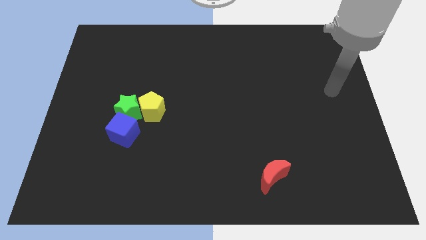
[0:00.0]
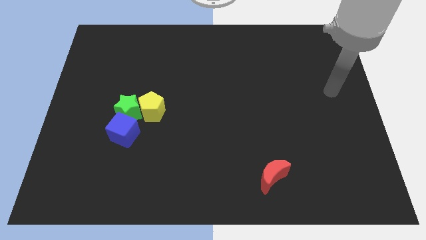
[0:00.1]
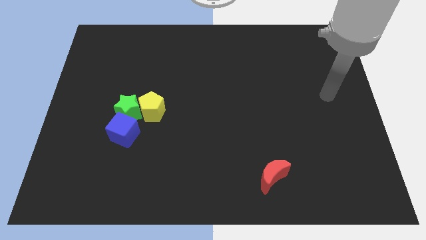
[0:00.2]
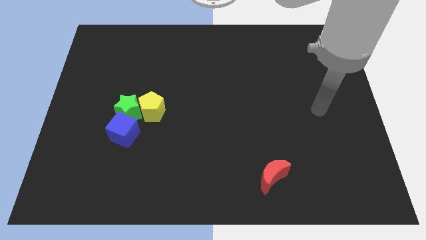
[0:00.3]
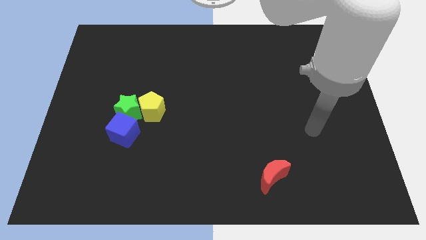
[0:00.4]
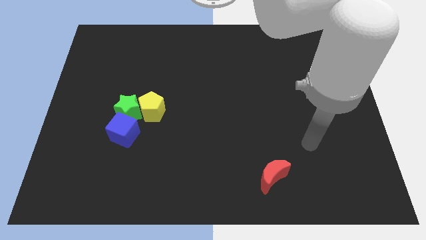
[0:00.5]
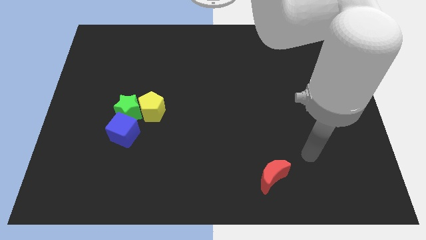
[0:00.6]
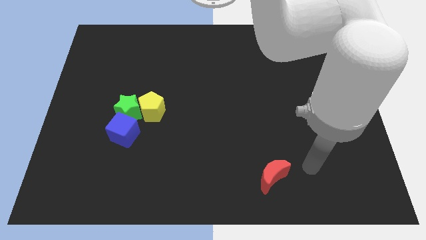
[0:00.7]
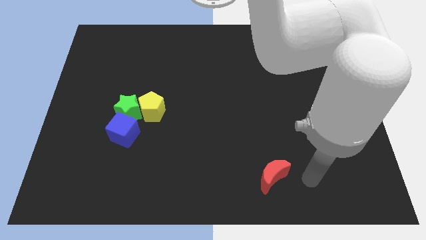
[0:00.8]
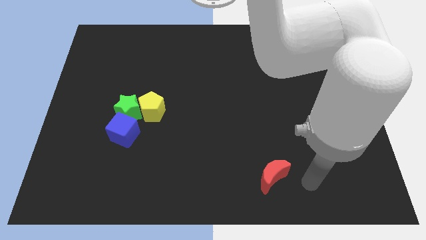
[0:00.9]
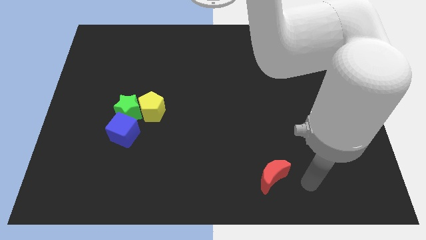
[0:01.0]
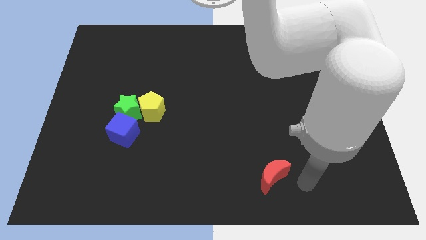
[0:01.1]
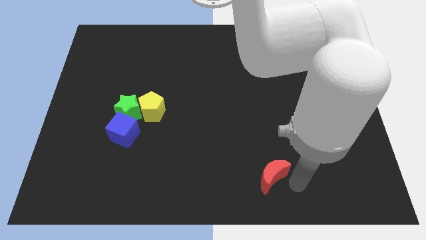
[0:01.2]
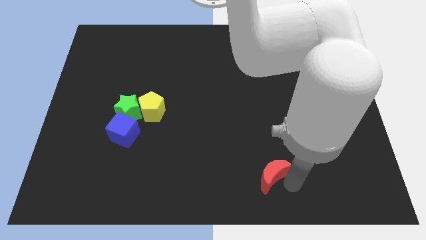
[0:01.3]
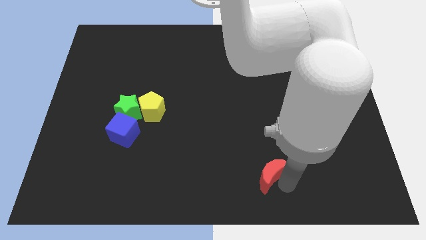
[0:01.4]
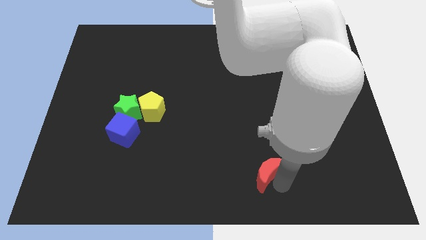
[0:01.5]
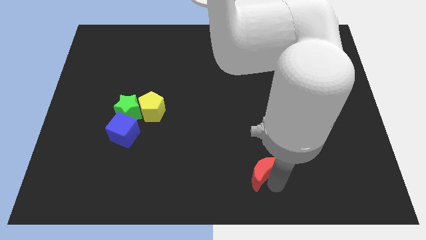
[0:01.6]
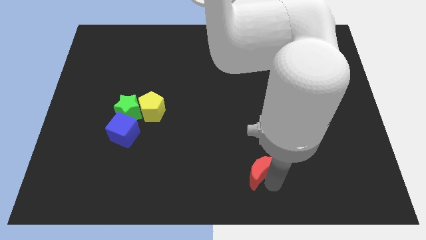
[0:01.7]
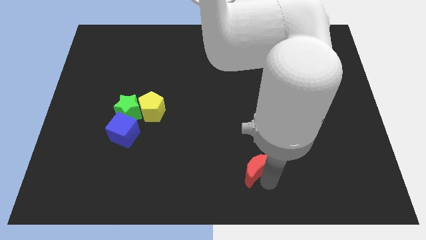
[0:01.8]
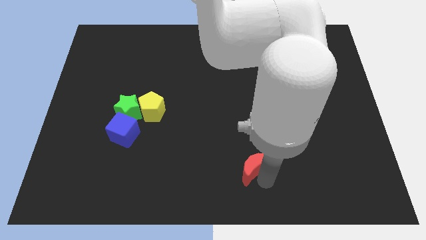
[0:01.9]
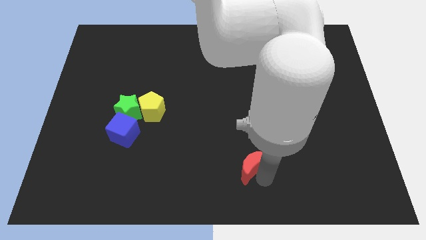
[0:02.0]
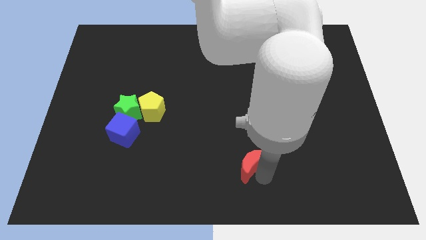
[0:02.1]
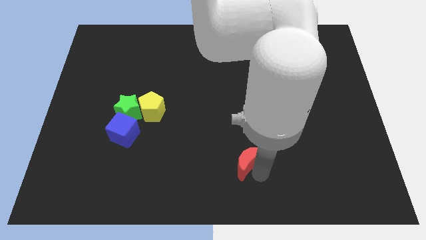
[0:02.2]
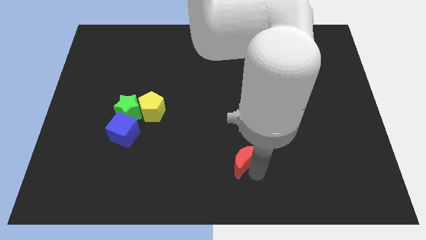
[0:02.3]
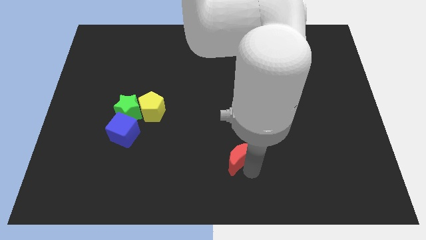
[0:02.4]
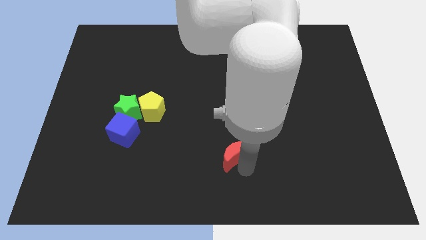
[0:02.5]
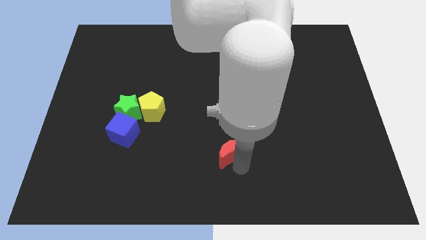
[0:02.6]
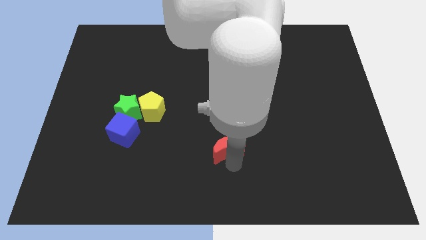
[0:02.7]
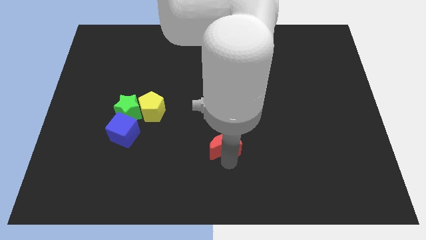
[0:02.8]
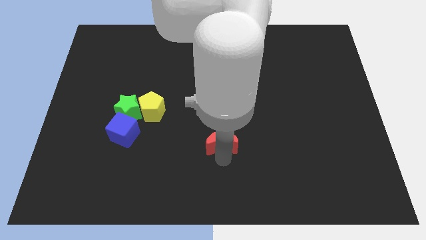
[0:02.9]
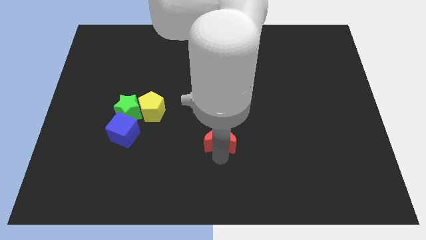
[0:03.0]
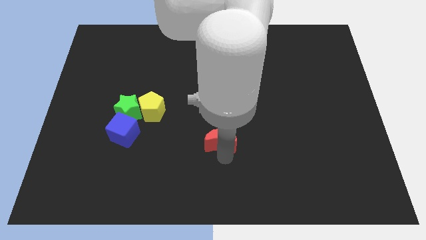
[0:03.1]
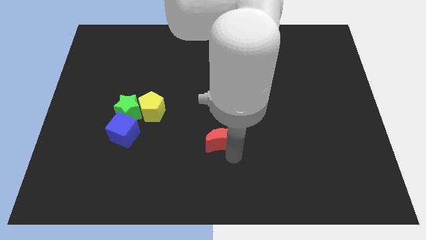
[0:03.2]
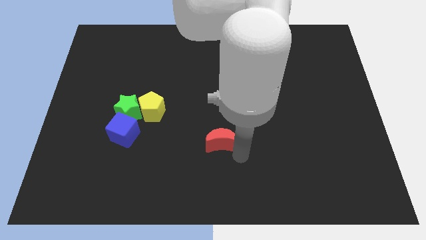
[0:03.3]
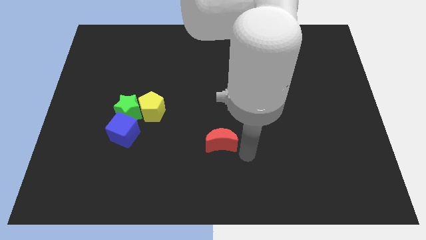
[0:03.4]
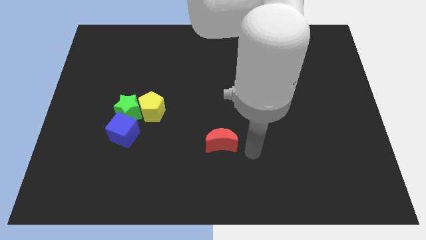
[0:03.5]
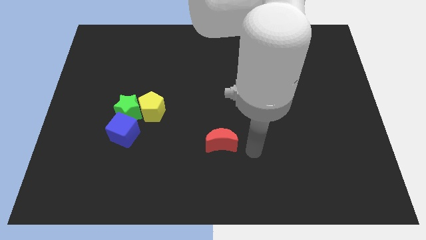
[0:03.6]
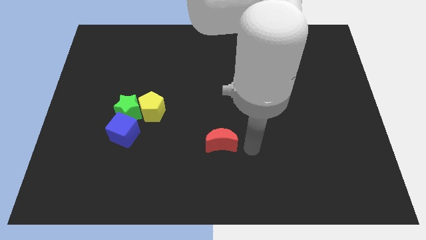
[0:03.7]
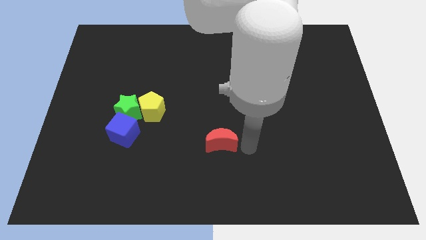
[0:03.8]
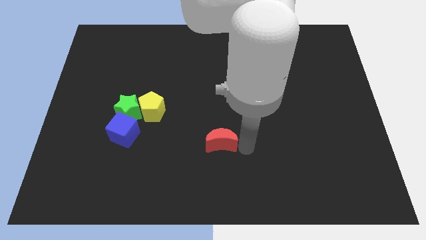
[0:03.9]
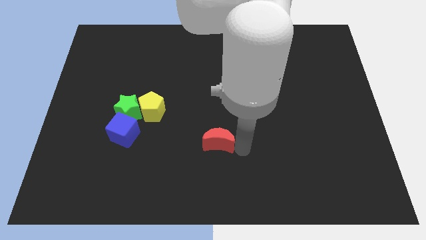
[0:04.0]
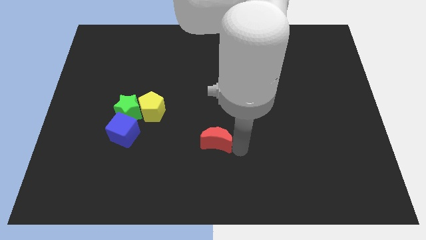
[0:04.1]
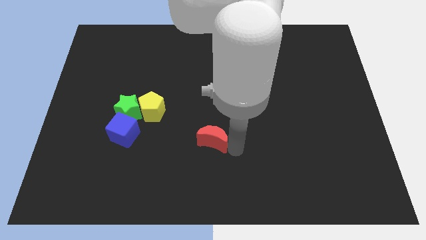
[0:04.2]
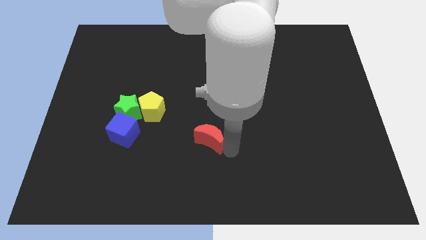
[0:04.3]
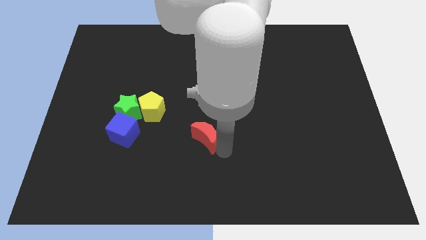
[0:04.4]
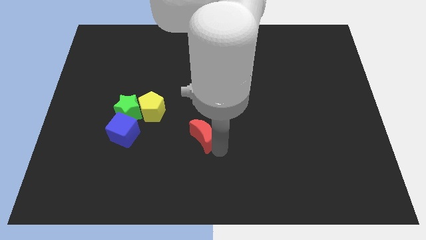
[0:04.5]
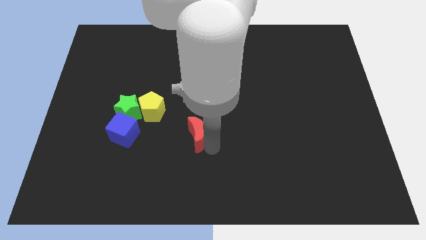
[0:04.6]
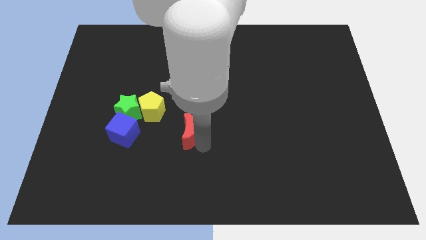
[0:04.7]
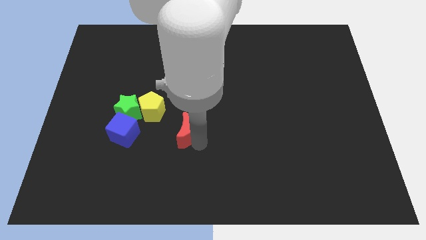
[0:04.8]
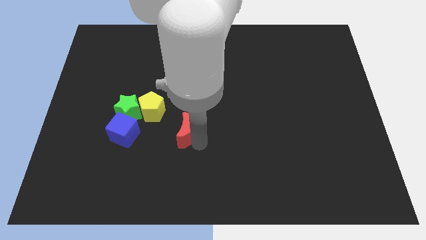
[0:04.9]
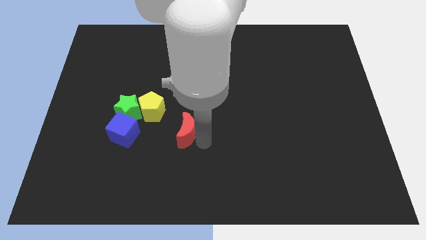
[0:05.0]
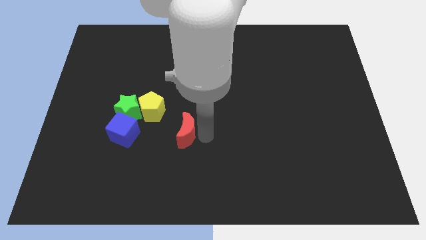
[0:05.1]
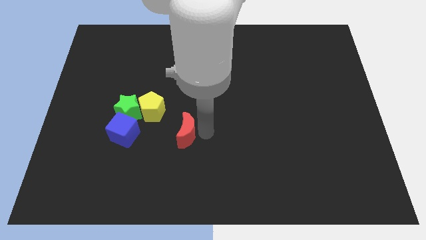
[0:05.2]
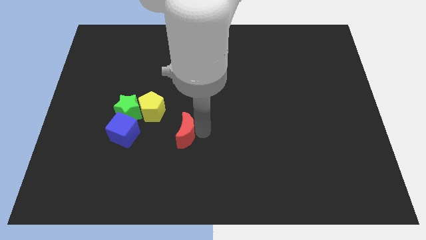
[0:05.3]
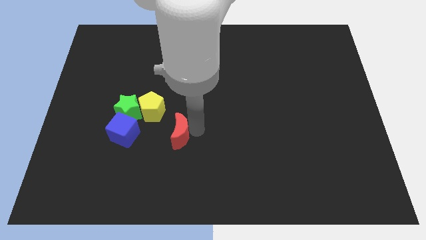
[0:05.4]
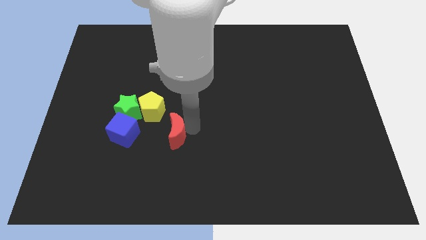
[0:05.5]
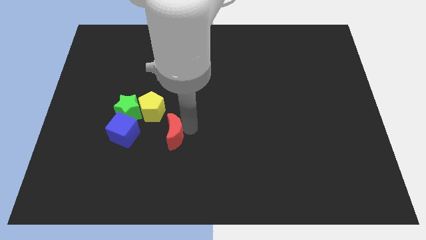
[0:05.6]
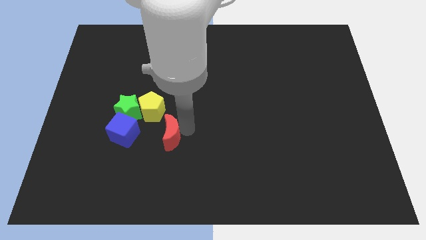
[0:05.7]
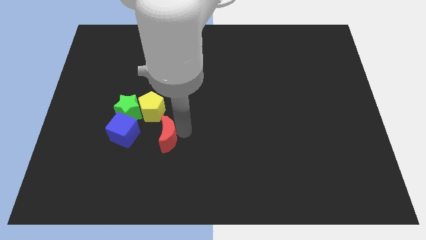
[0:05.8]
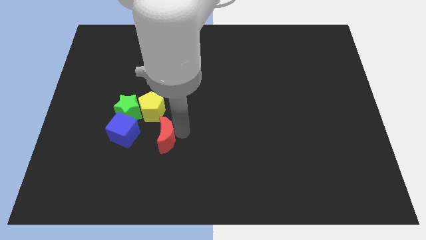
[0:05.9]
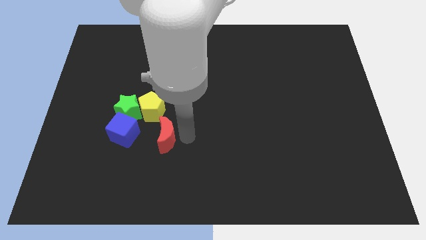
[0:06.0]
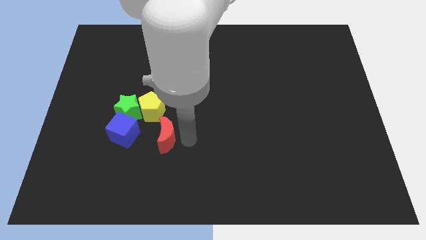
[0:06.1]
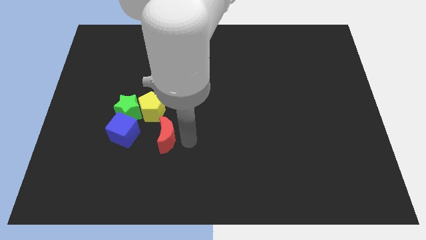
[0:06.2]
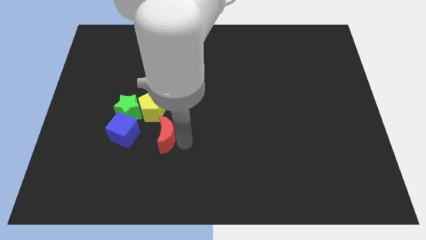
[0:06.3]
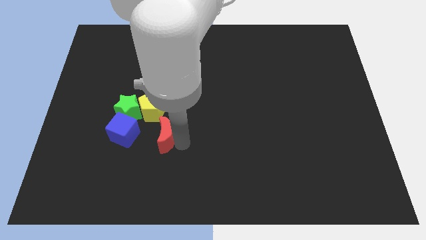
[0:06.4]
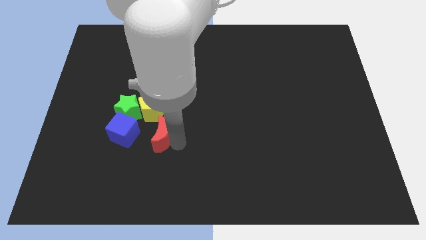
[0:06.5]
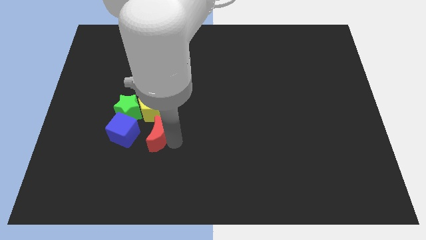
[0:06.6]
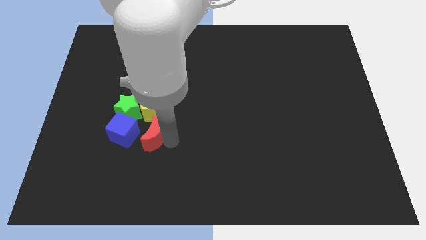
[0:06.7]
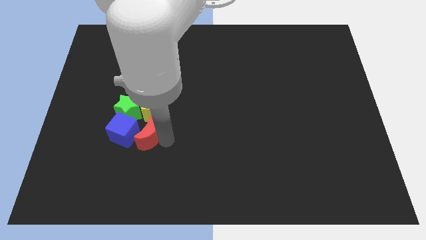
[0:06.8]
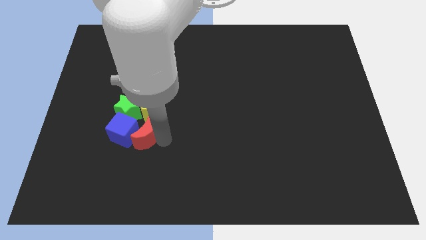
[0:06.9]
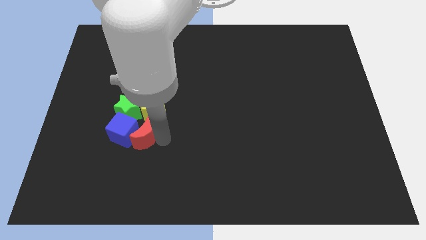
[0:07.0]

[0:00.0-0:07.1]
move the red moon close to the blue cube

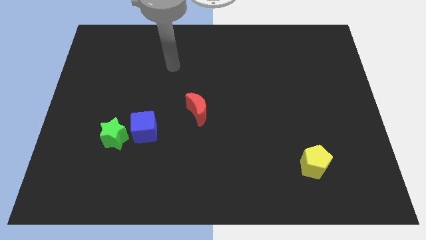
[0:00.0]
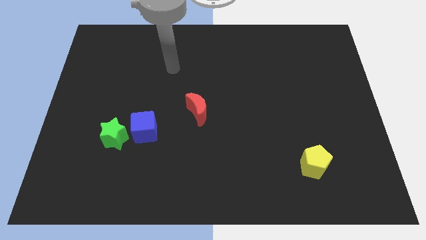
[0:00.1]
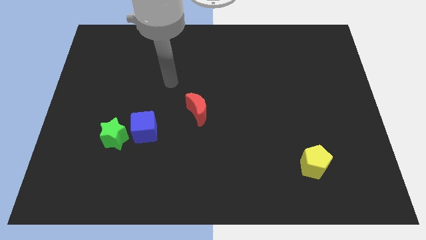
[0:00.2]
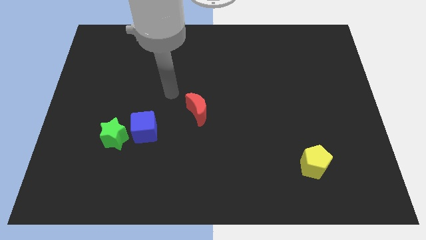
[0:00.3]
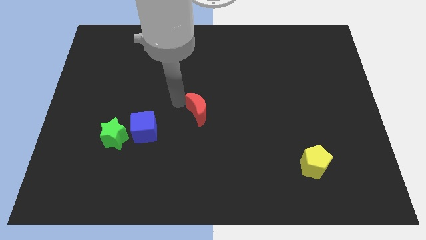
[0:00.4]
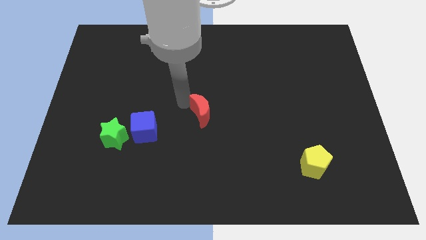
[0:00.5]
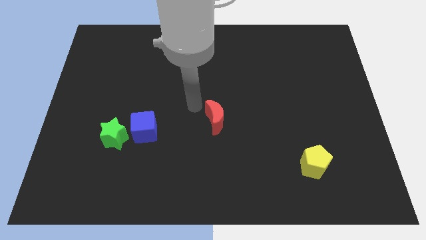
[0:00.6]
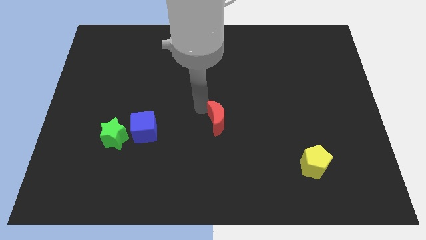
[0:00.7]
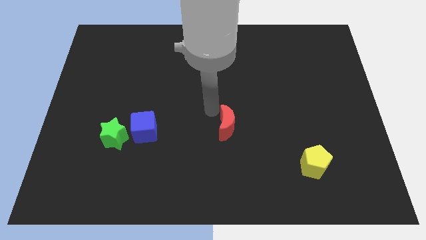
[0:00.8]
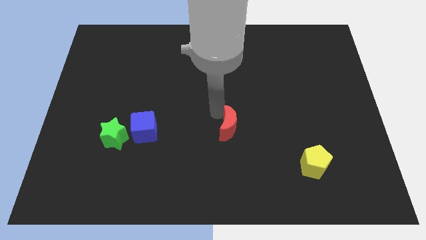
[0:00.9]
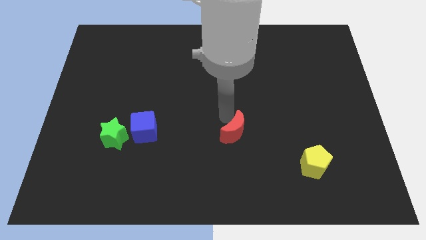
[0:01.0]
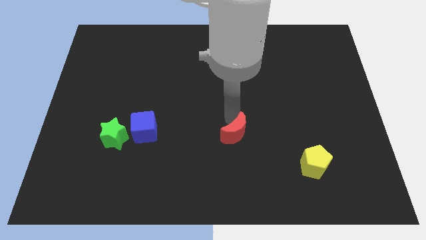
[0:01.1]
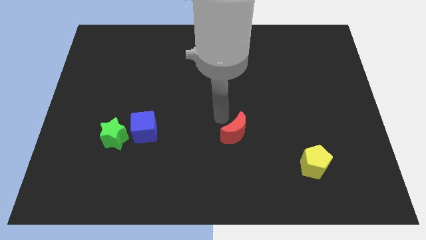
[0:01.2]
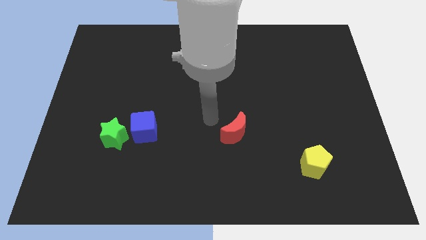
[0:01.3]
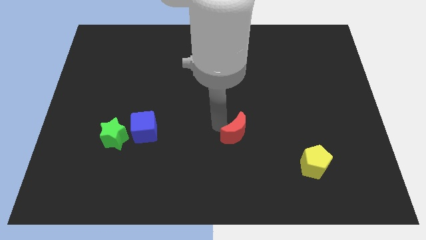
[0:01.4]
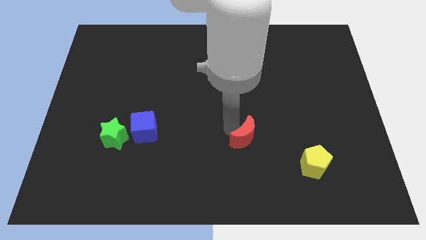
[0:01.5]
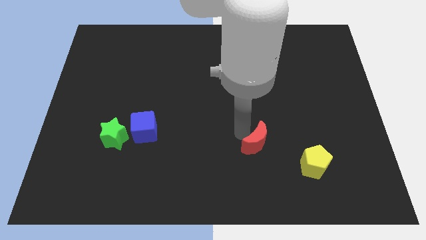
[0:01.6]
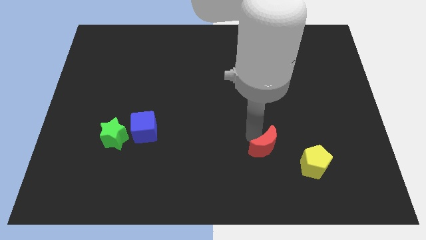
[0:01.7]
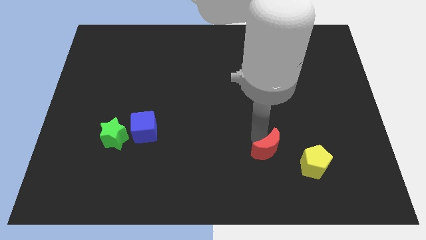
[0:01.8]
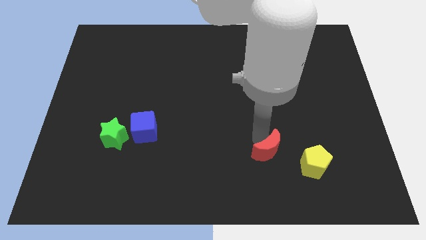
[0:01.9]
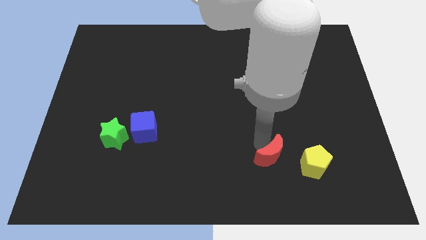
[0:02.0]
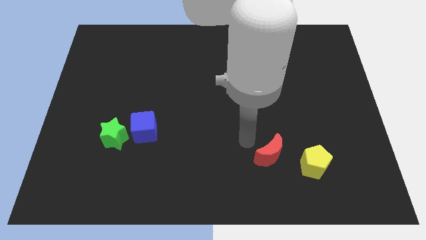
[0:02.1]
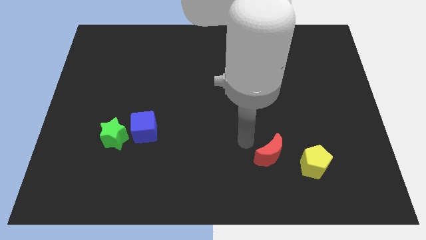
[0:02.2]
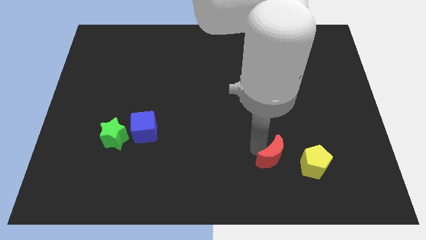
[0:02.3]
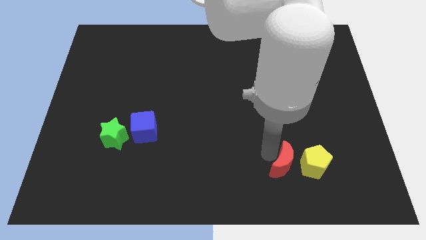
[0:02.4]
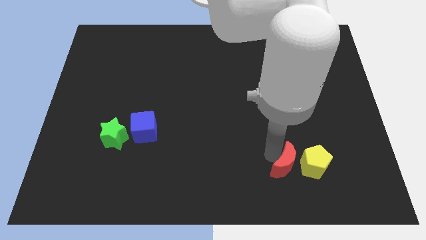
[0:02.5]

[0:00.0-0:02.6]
push the red block close to the yellow pentagon
